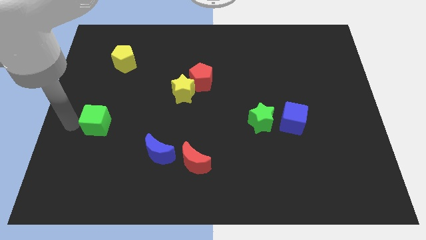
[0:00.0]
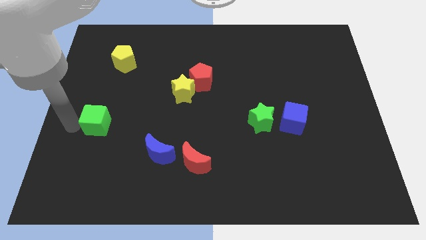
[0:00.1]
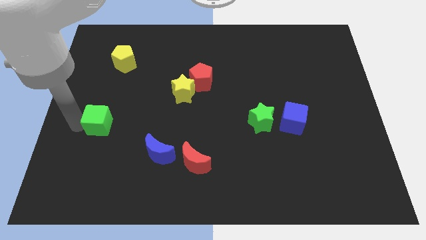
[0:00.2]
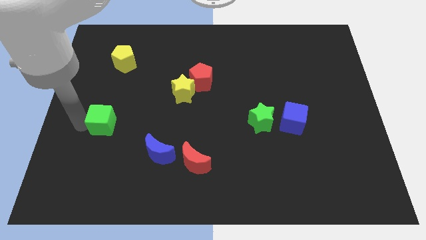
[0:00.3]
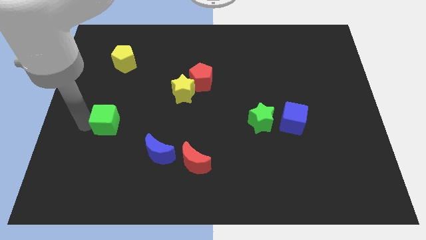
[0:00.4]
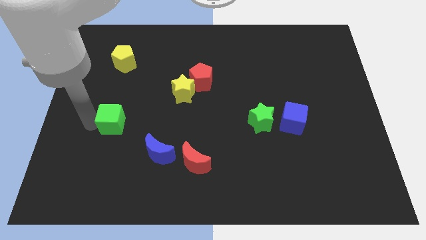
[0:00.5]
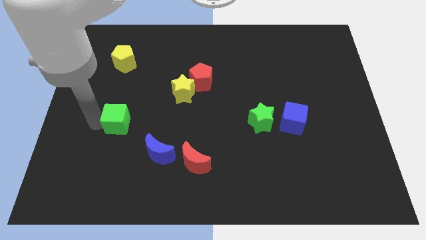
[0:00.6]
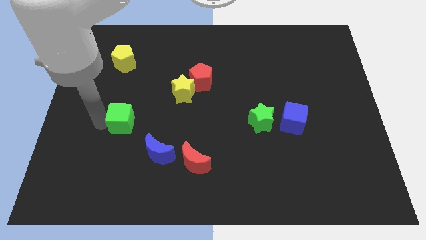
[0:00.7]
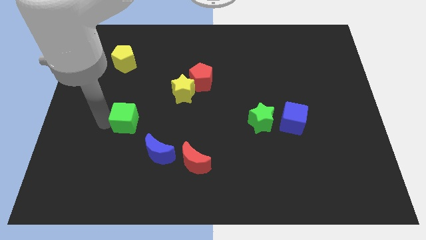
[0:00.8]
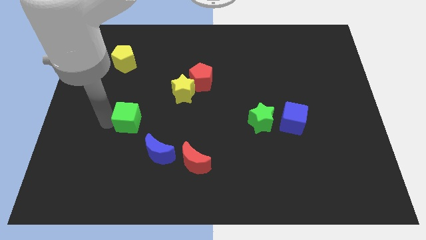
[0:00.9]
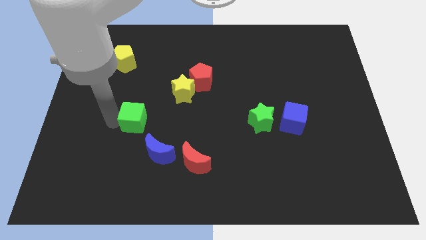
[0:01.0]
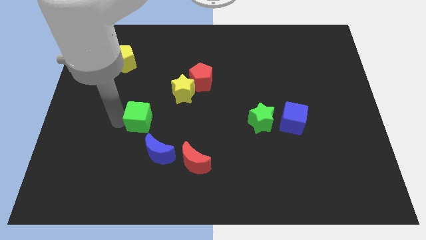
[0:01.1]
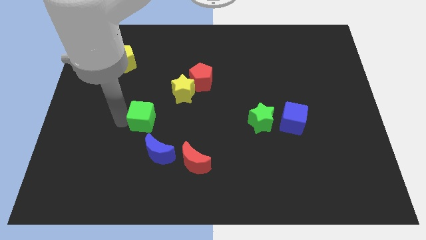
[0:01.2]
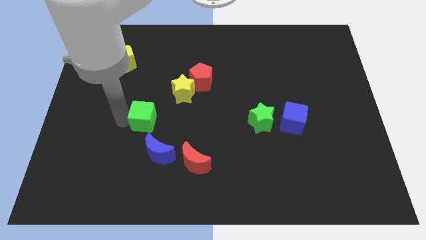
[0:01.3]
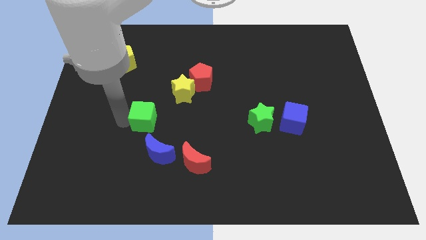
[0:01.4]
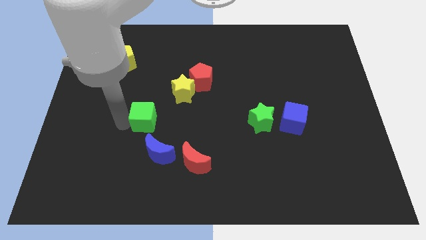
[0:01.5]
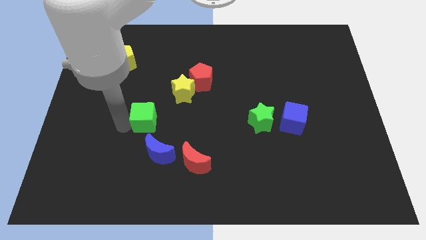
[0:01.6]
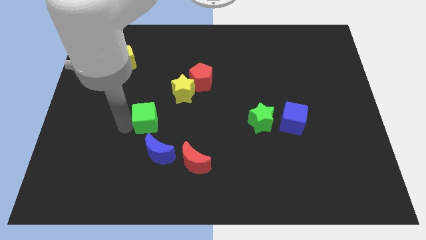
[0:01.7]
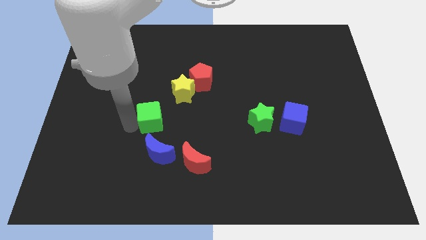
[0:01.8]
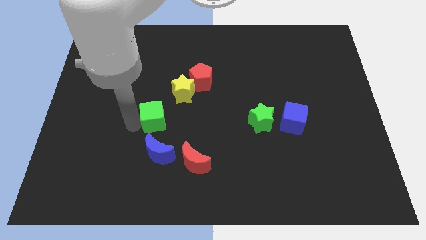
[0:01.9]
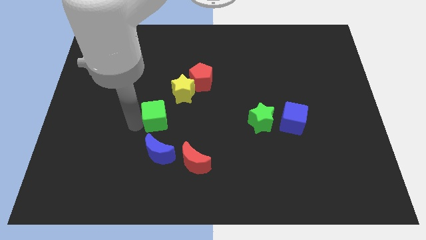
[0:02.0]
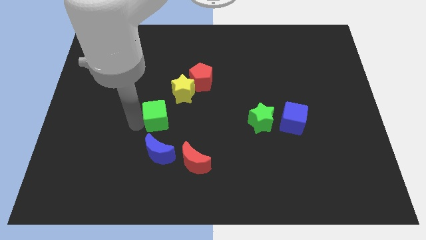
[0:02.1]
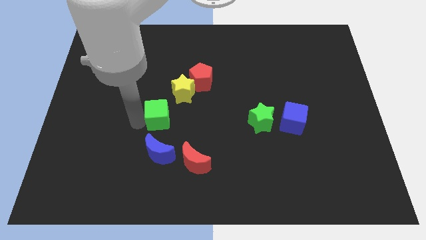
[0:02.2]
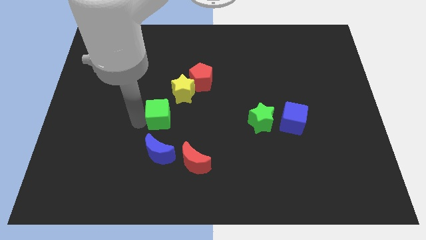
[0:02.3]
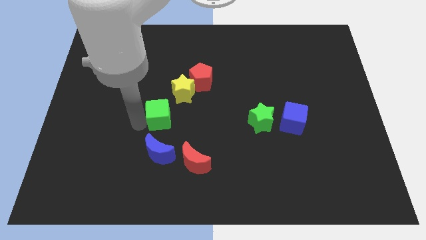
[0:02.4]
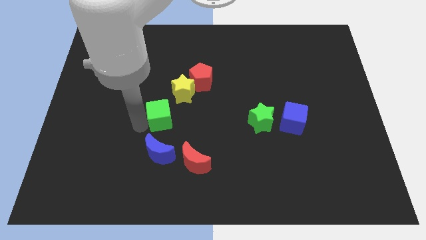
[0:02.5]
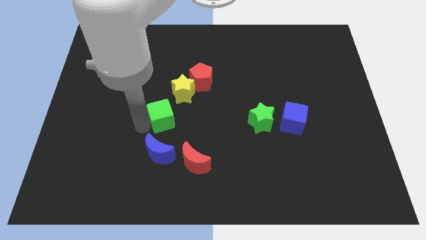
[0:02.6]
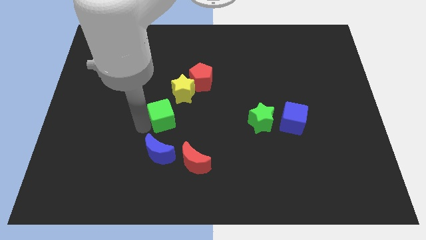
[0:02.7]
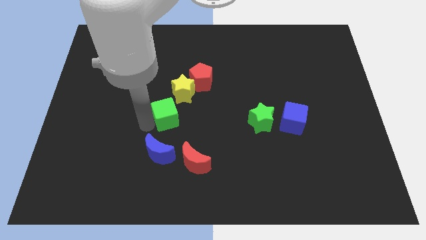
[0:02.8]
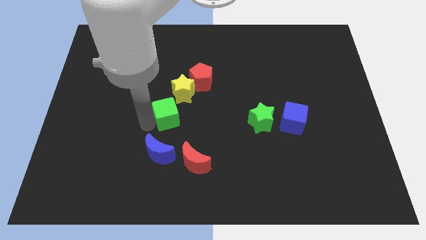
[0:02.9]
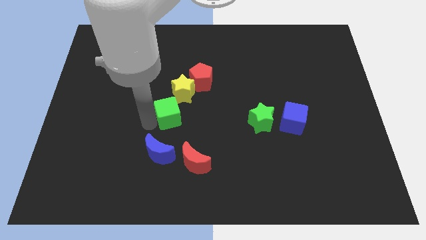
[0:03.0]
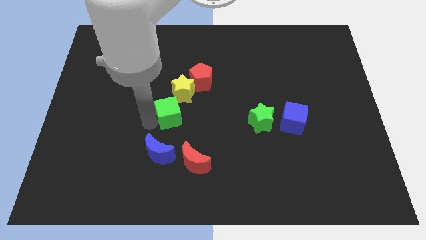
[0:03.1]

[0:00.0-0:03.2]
place the green cube in between the yellow star and blue moon

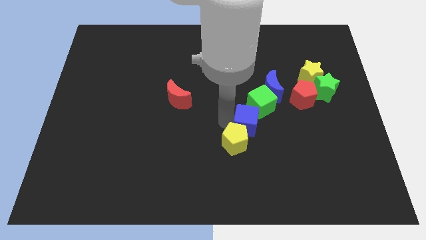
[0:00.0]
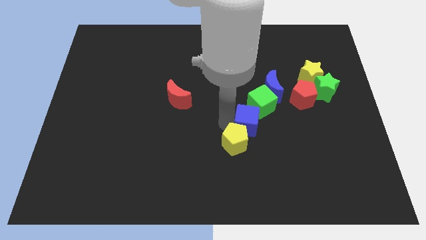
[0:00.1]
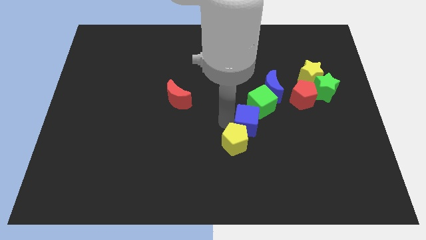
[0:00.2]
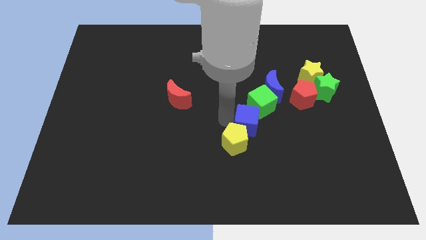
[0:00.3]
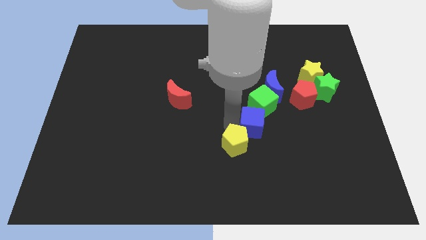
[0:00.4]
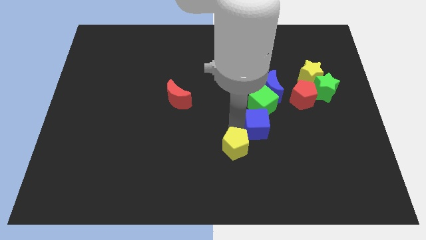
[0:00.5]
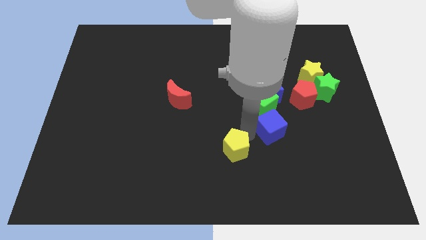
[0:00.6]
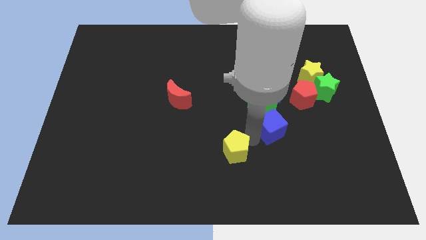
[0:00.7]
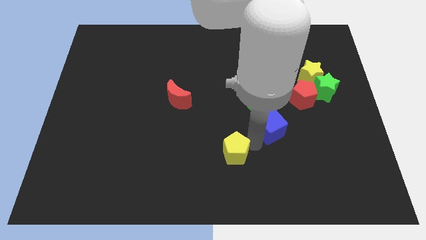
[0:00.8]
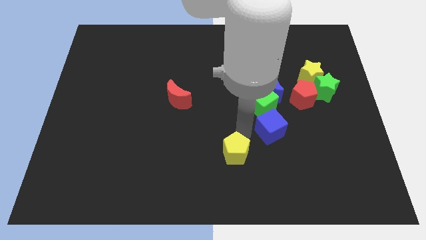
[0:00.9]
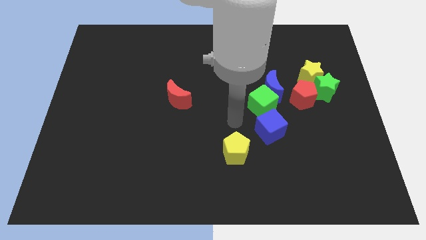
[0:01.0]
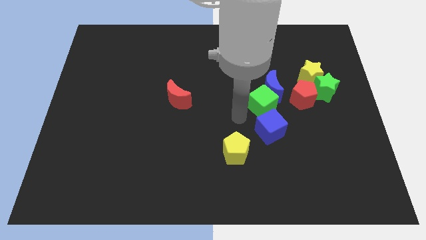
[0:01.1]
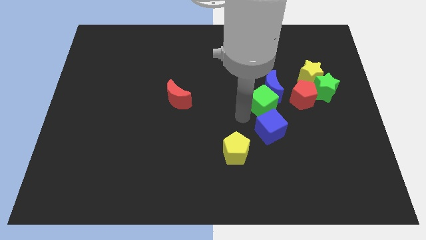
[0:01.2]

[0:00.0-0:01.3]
separate yellow pentagon and blue cube

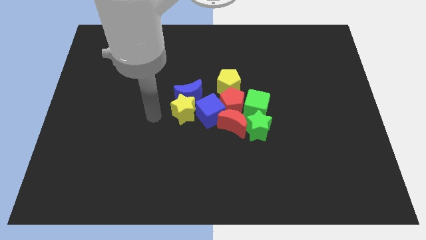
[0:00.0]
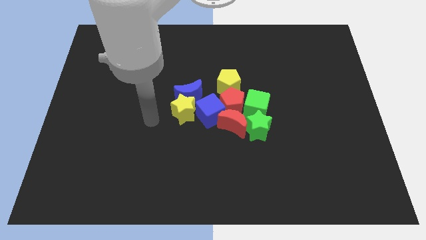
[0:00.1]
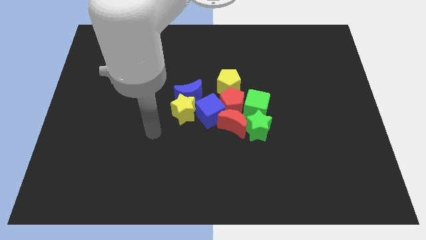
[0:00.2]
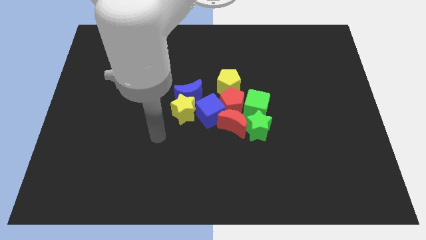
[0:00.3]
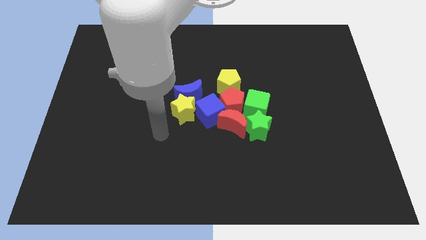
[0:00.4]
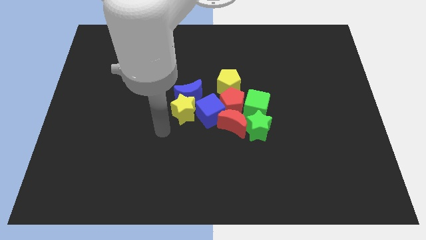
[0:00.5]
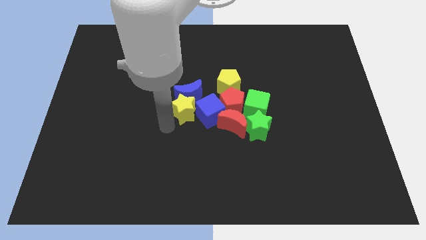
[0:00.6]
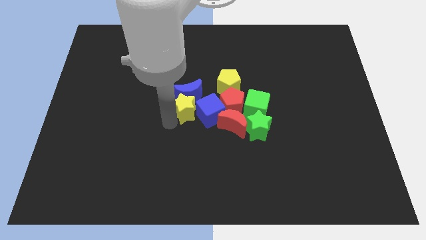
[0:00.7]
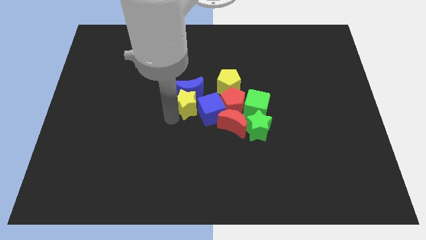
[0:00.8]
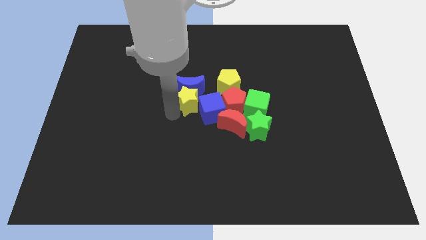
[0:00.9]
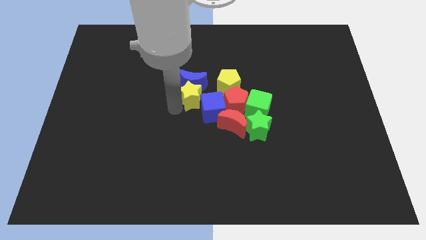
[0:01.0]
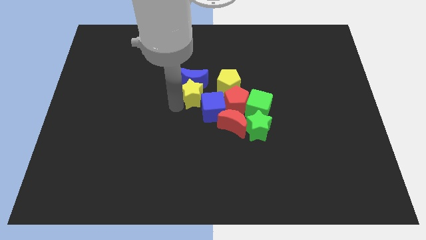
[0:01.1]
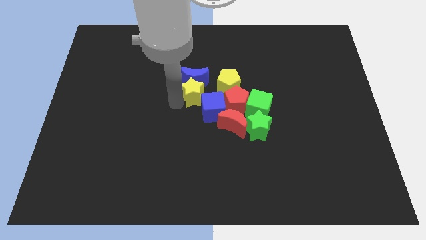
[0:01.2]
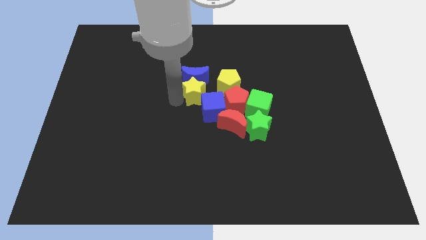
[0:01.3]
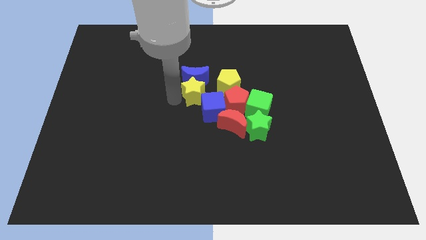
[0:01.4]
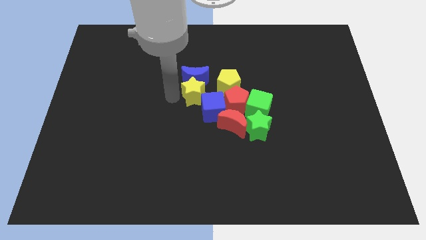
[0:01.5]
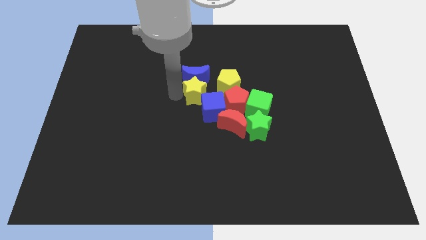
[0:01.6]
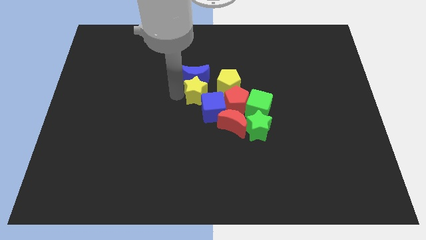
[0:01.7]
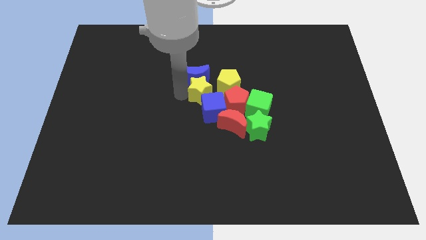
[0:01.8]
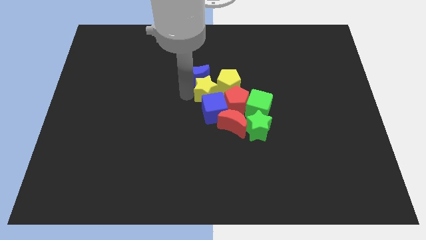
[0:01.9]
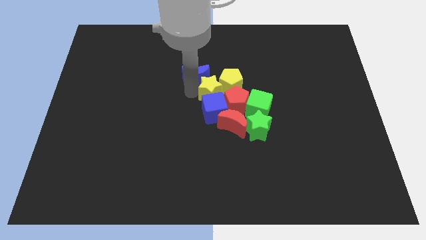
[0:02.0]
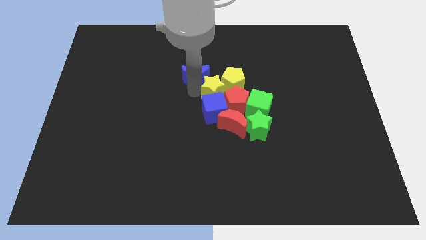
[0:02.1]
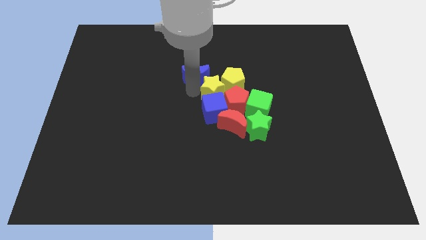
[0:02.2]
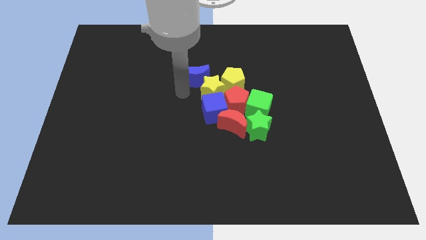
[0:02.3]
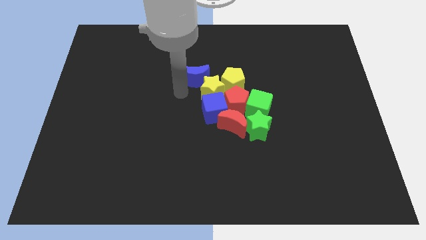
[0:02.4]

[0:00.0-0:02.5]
push the yellow star into the yellow pentagon

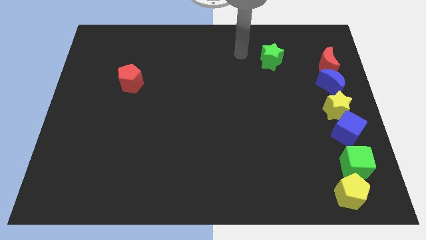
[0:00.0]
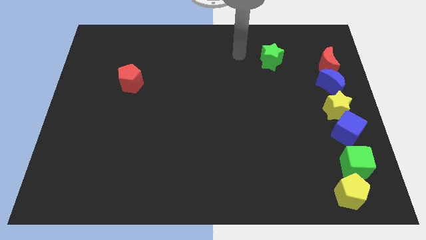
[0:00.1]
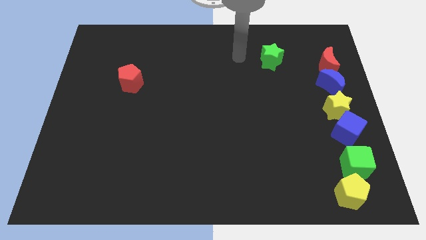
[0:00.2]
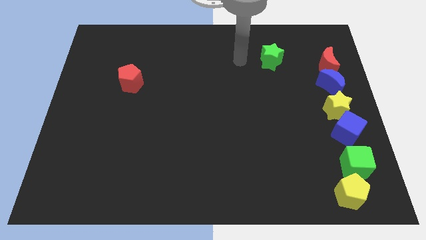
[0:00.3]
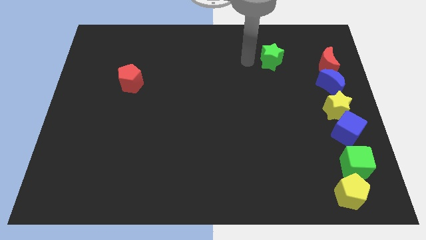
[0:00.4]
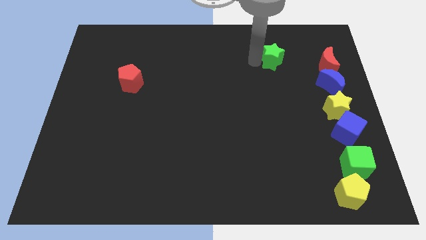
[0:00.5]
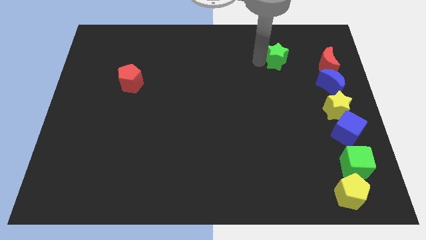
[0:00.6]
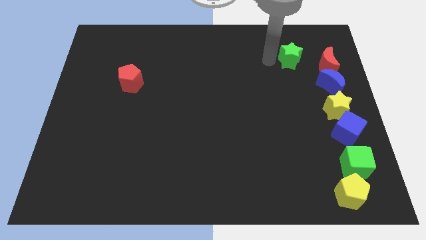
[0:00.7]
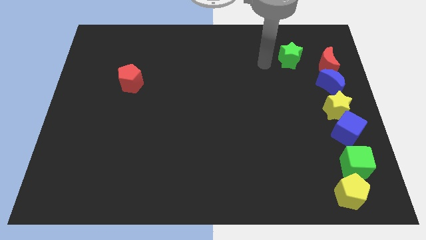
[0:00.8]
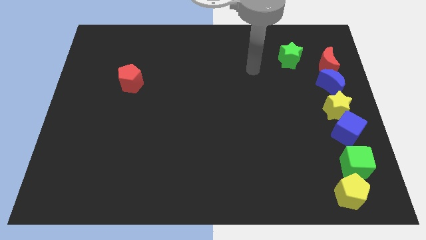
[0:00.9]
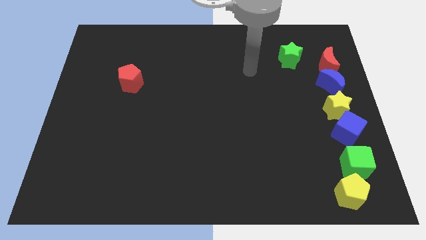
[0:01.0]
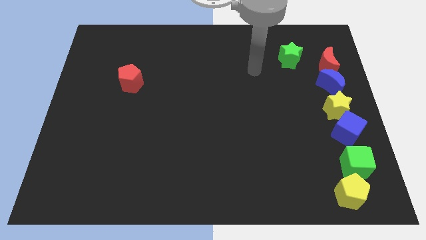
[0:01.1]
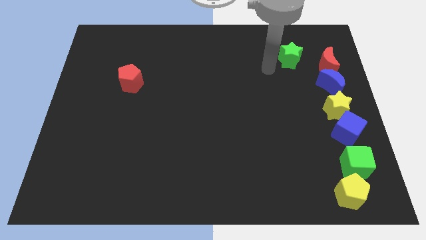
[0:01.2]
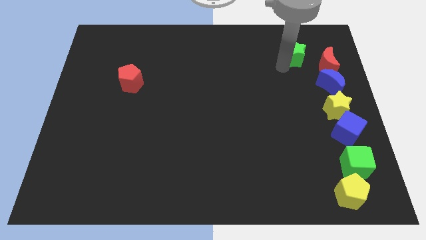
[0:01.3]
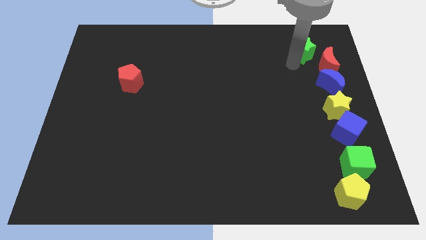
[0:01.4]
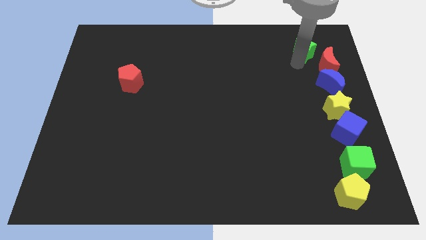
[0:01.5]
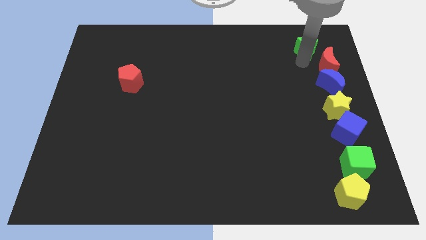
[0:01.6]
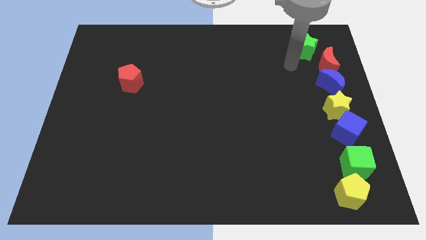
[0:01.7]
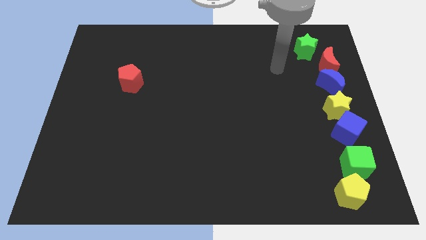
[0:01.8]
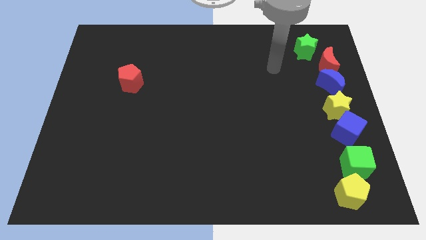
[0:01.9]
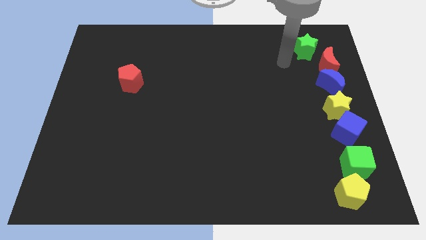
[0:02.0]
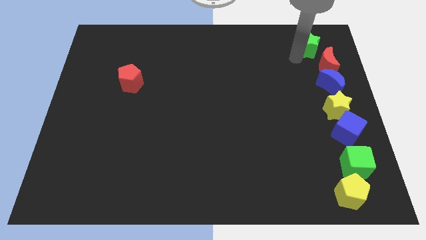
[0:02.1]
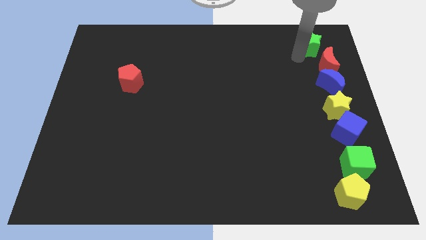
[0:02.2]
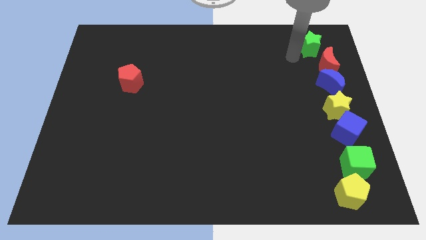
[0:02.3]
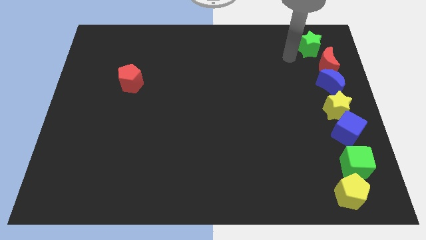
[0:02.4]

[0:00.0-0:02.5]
put the green star at the top left side of red moon
